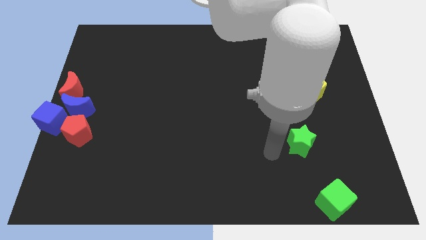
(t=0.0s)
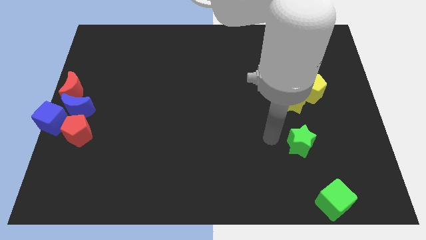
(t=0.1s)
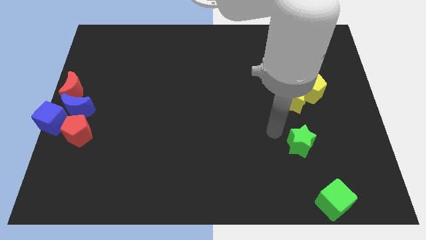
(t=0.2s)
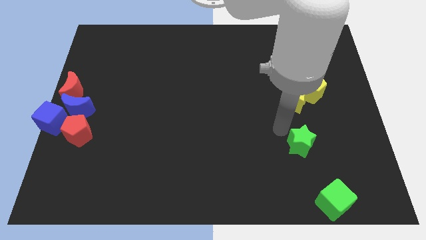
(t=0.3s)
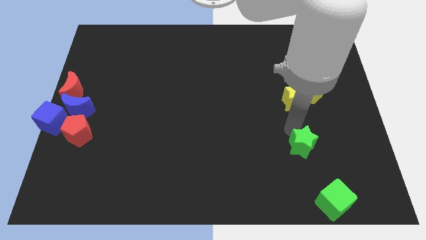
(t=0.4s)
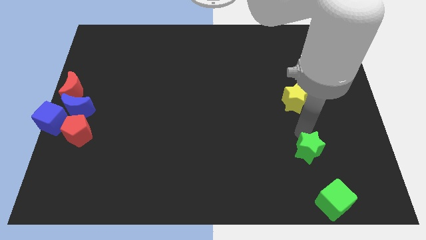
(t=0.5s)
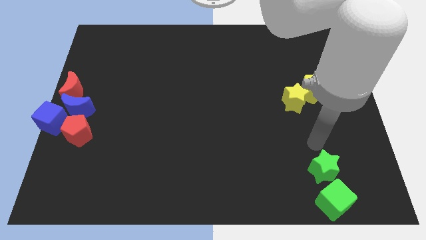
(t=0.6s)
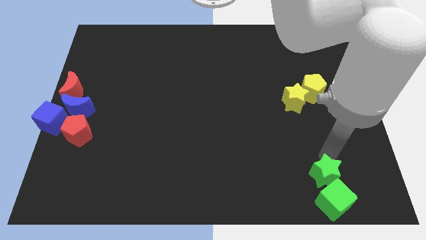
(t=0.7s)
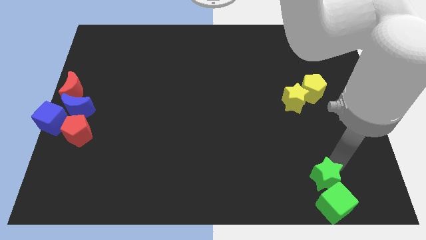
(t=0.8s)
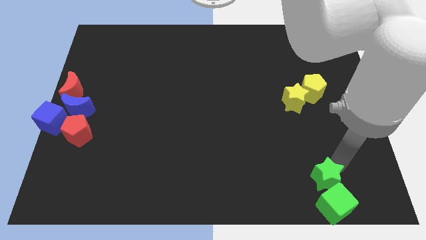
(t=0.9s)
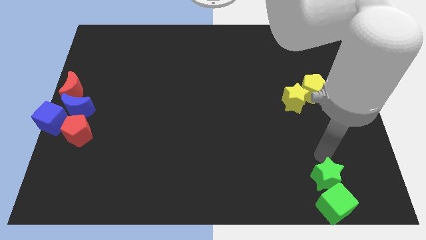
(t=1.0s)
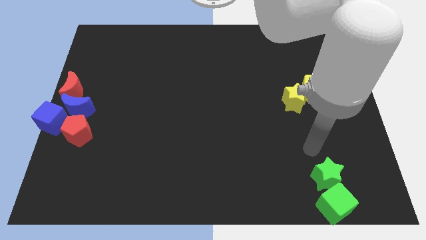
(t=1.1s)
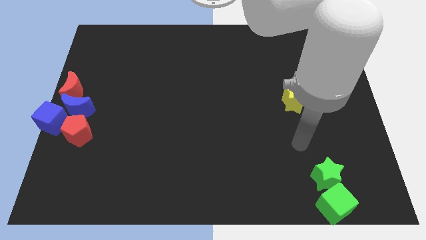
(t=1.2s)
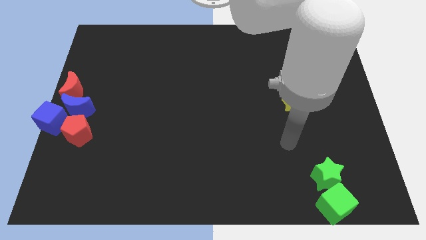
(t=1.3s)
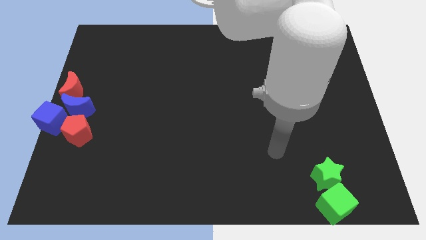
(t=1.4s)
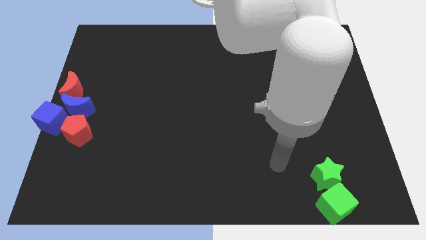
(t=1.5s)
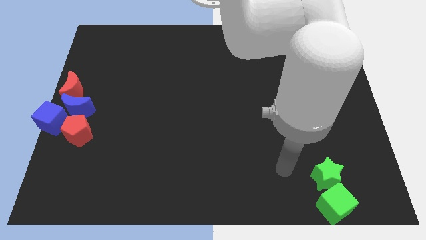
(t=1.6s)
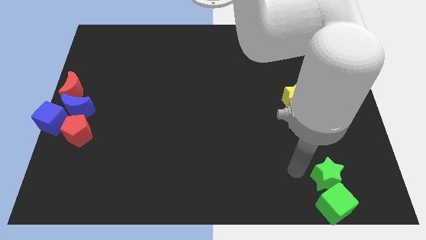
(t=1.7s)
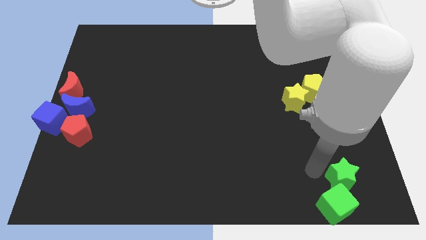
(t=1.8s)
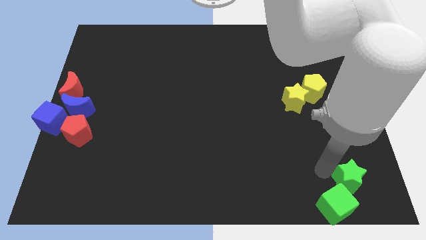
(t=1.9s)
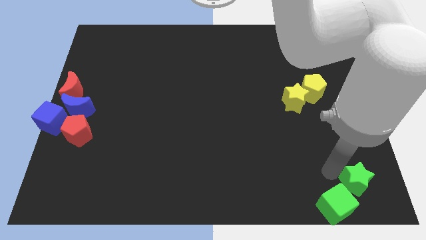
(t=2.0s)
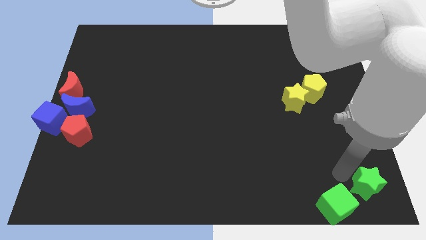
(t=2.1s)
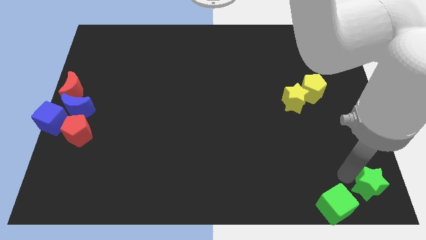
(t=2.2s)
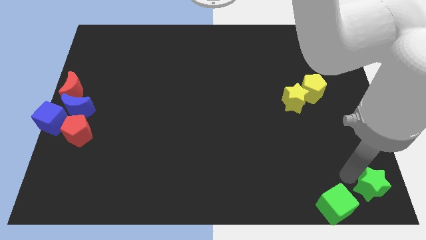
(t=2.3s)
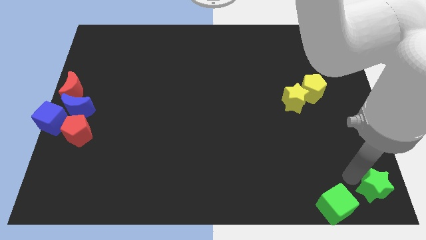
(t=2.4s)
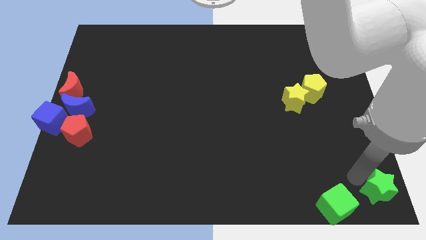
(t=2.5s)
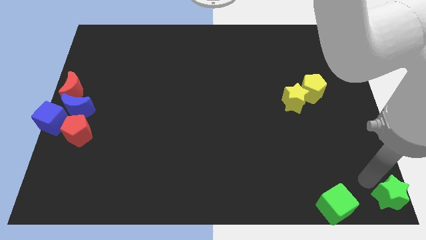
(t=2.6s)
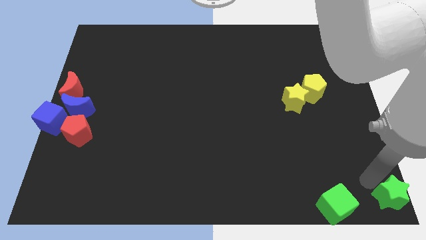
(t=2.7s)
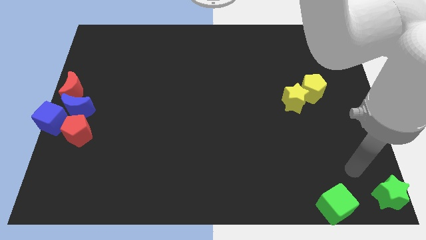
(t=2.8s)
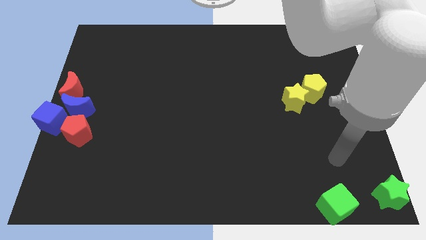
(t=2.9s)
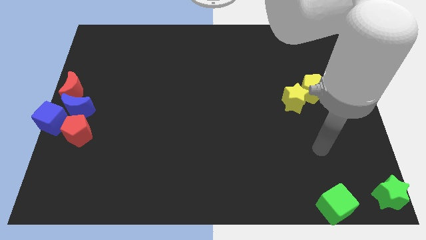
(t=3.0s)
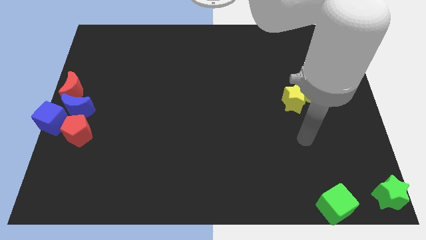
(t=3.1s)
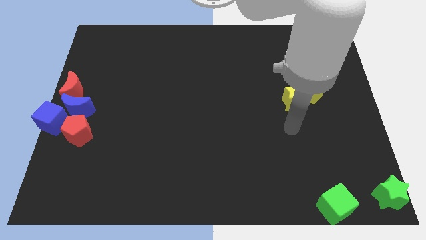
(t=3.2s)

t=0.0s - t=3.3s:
move the green star to the bottom right corner of the board

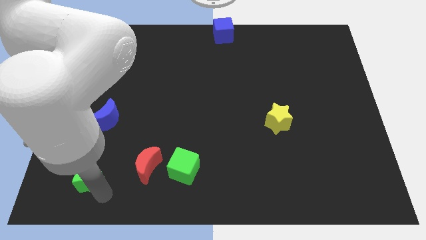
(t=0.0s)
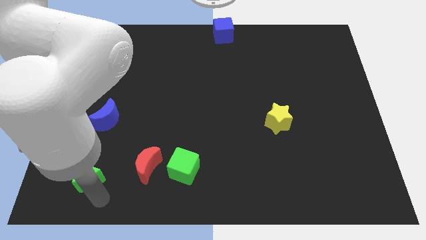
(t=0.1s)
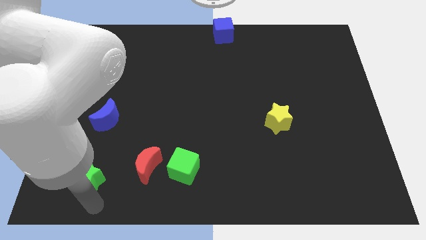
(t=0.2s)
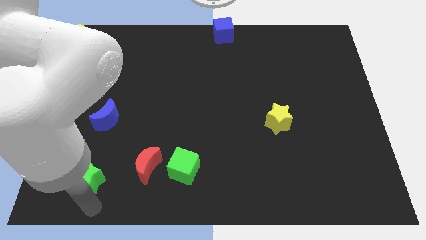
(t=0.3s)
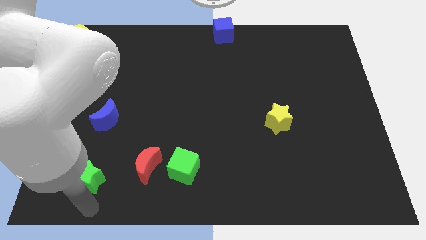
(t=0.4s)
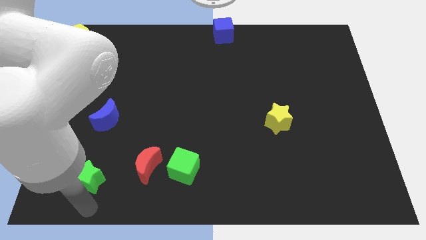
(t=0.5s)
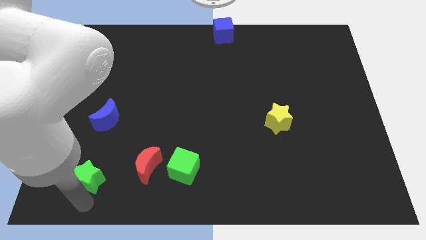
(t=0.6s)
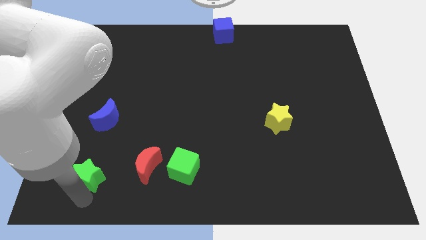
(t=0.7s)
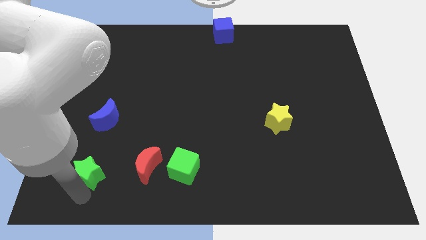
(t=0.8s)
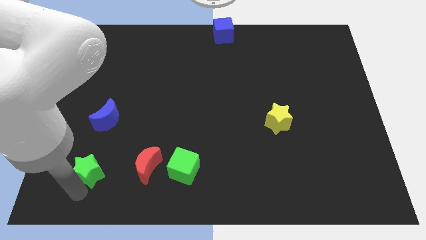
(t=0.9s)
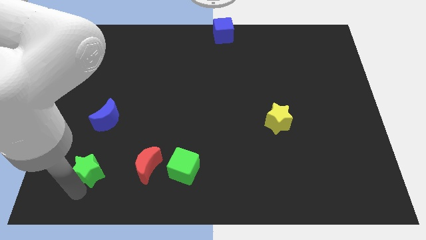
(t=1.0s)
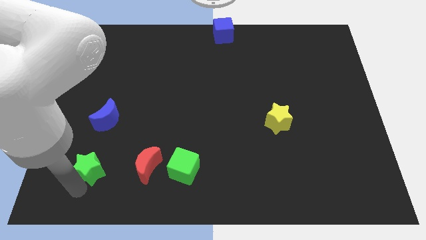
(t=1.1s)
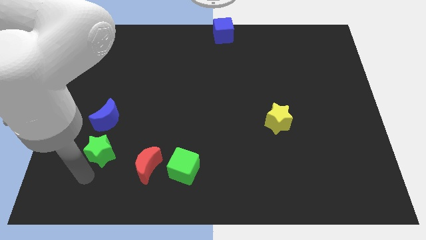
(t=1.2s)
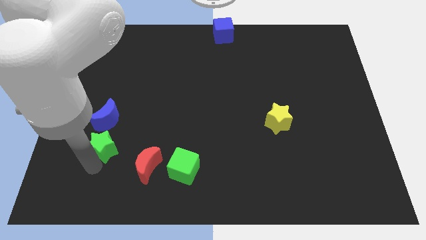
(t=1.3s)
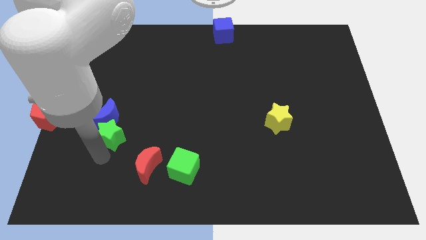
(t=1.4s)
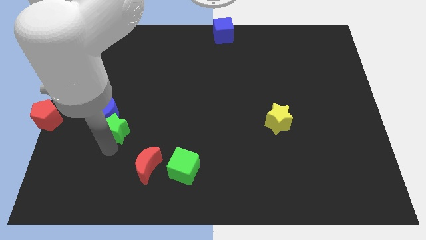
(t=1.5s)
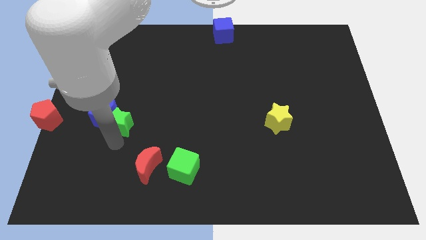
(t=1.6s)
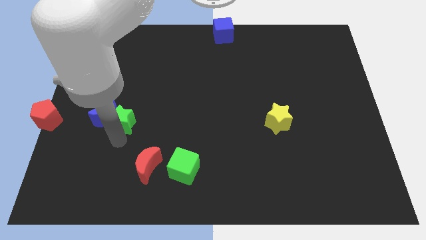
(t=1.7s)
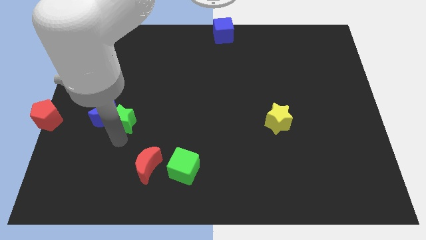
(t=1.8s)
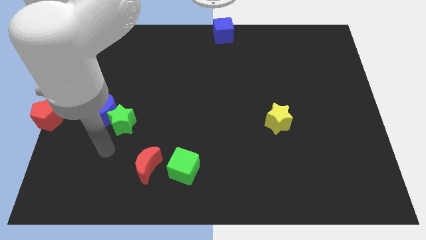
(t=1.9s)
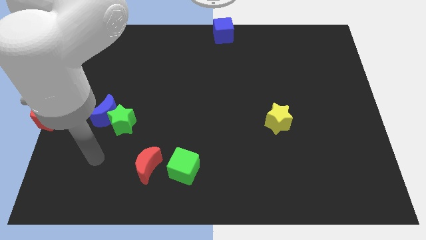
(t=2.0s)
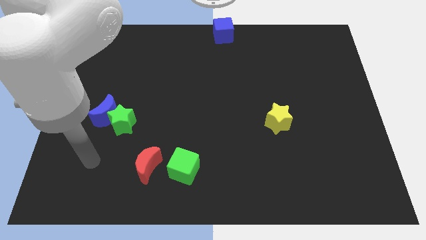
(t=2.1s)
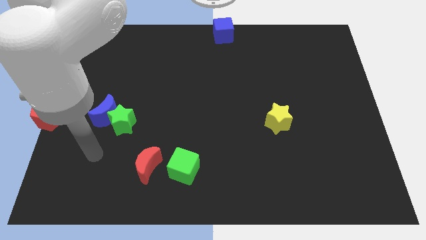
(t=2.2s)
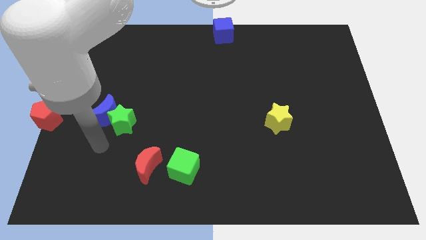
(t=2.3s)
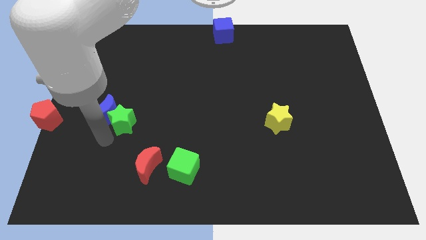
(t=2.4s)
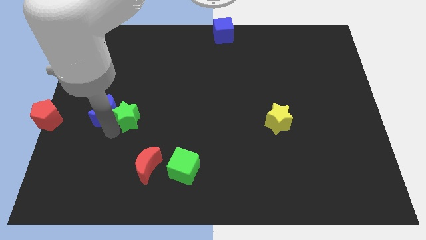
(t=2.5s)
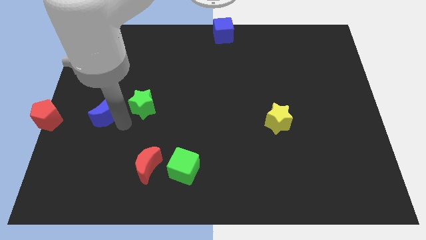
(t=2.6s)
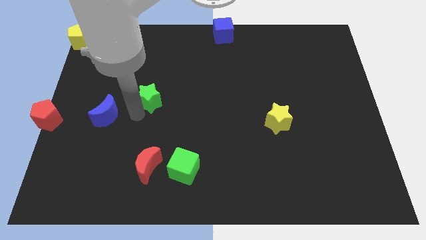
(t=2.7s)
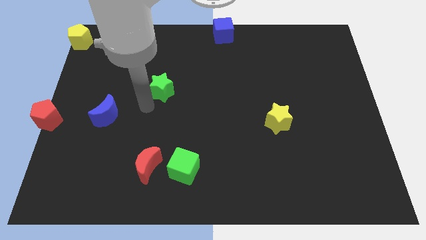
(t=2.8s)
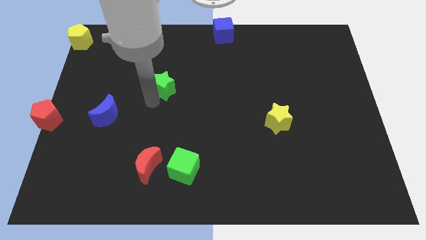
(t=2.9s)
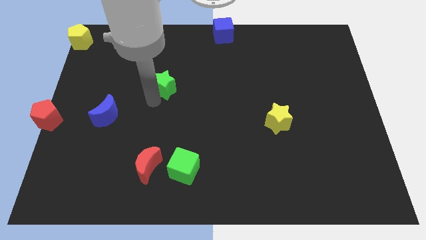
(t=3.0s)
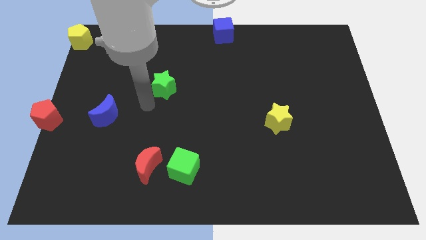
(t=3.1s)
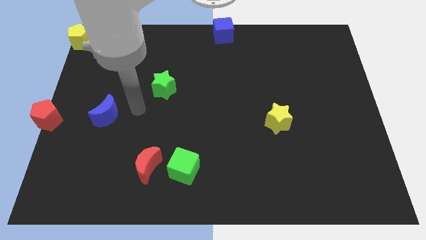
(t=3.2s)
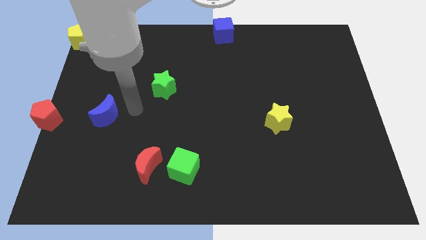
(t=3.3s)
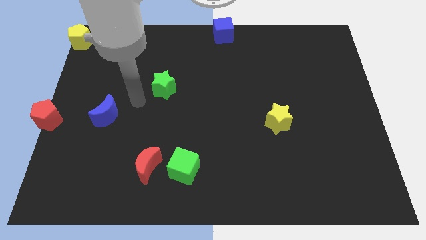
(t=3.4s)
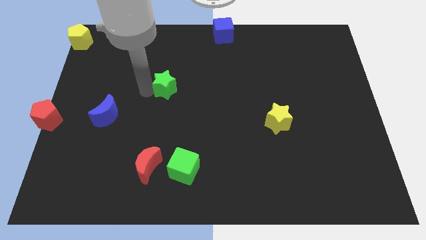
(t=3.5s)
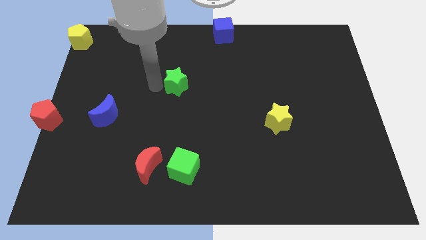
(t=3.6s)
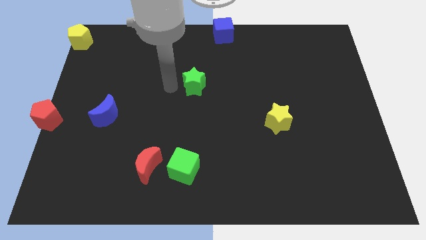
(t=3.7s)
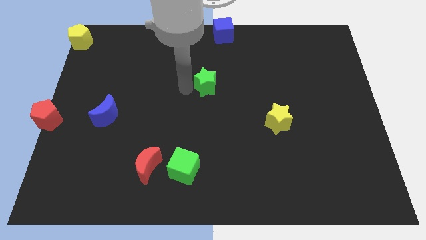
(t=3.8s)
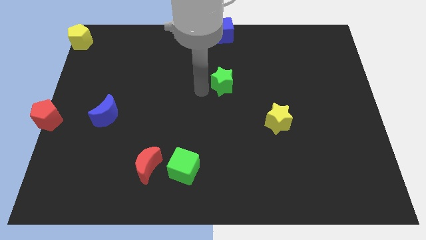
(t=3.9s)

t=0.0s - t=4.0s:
slide the green star towards the top center of the board

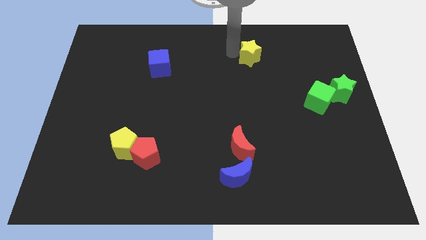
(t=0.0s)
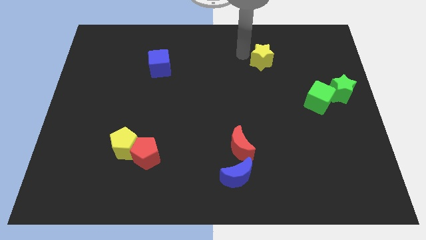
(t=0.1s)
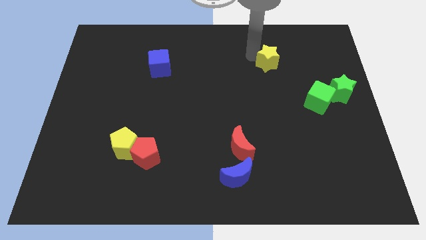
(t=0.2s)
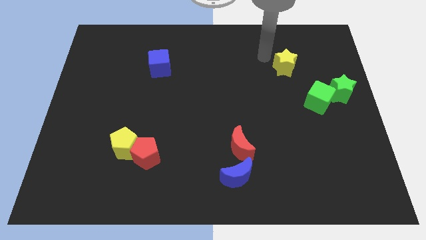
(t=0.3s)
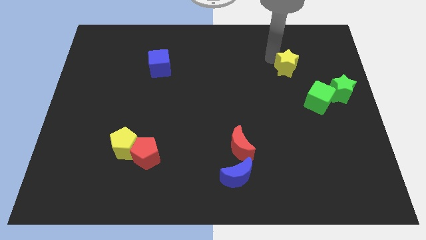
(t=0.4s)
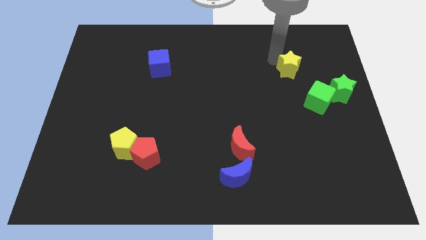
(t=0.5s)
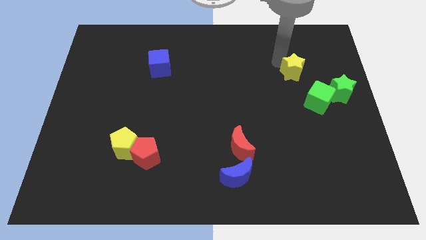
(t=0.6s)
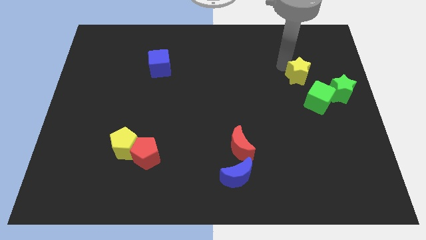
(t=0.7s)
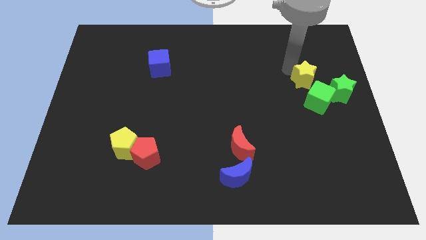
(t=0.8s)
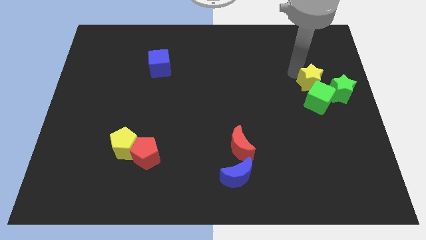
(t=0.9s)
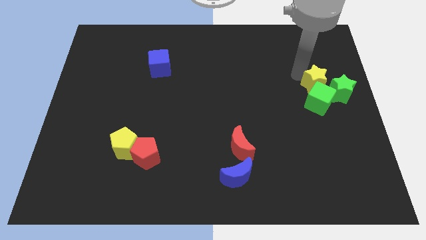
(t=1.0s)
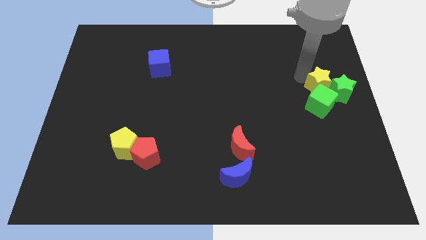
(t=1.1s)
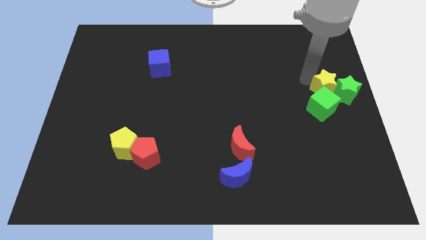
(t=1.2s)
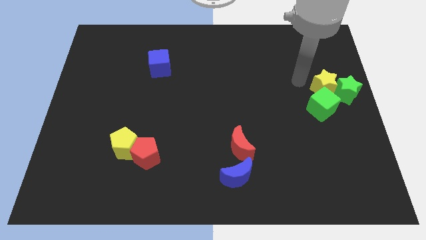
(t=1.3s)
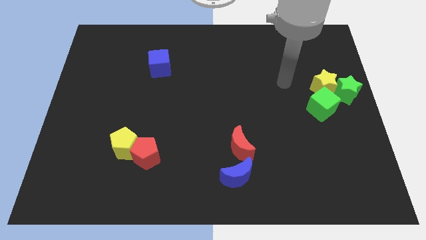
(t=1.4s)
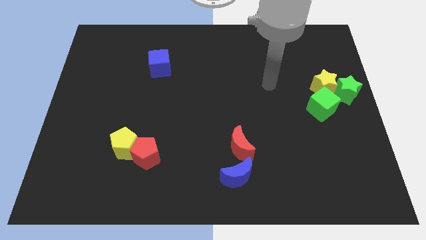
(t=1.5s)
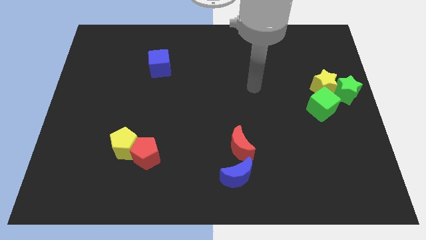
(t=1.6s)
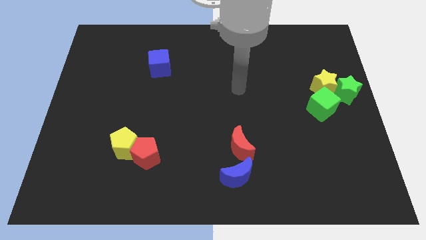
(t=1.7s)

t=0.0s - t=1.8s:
push the yellow star into green cube and green star
